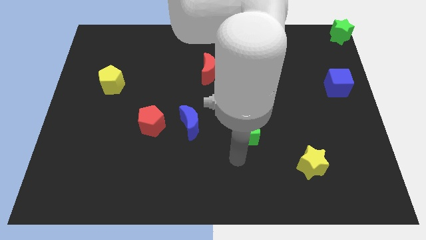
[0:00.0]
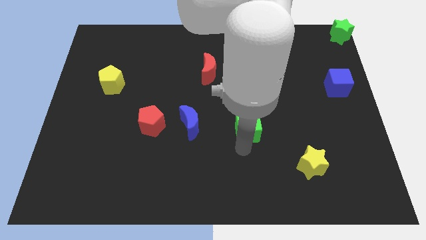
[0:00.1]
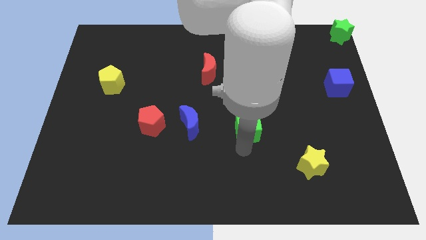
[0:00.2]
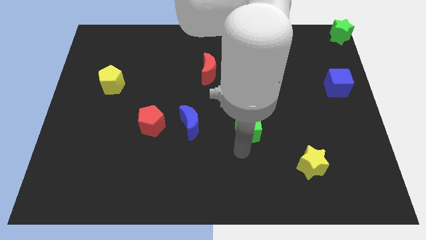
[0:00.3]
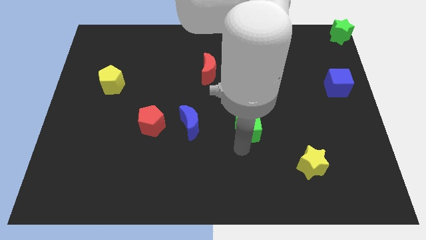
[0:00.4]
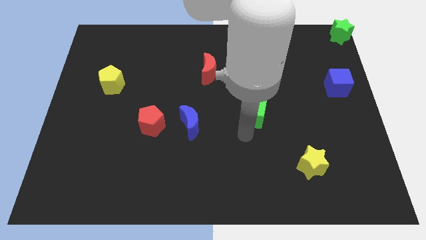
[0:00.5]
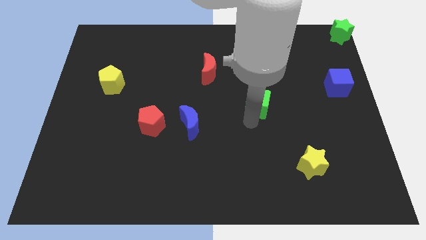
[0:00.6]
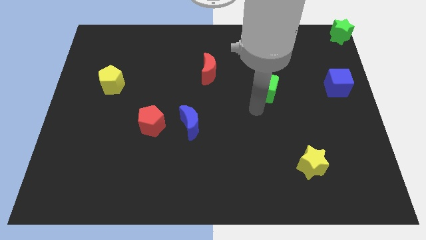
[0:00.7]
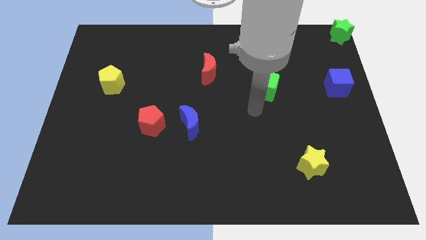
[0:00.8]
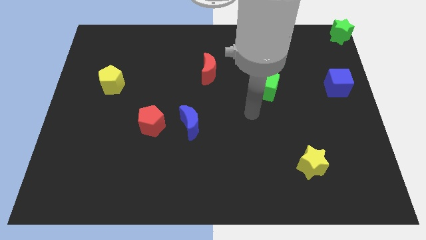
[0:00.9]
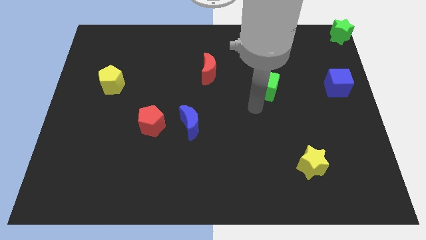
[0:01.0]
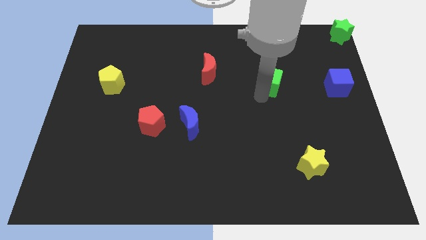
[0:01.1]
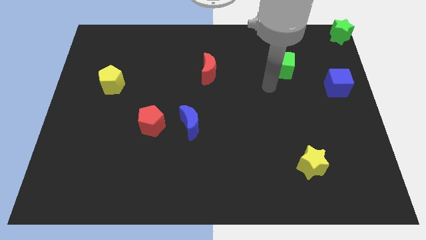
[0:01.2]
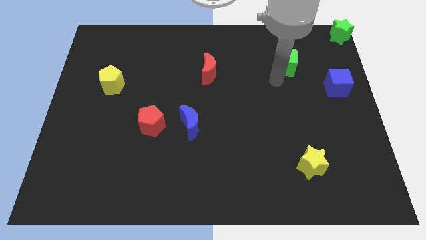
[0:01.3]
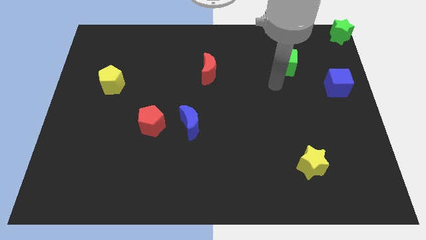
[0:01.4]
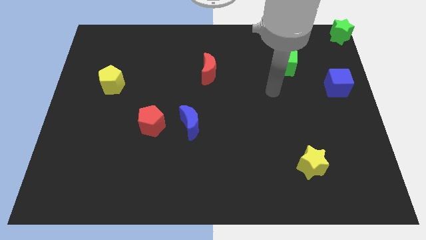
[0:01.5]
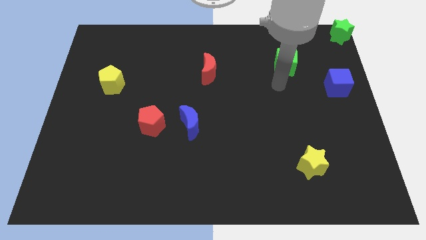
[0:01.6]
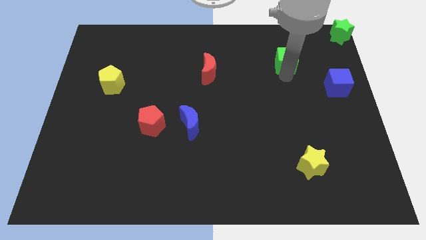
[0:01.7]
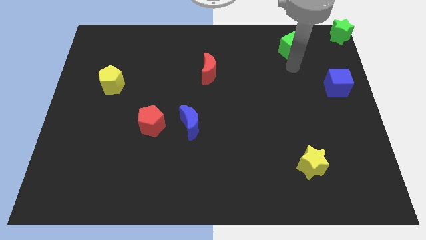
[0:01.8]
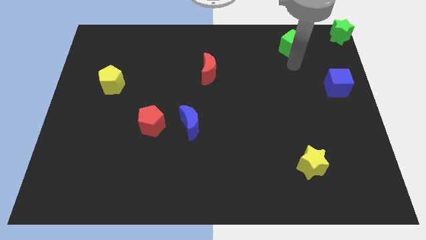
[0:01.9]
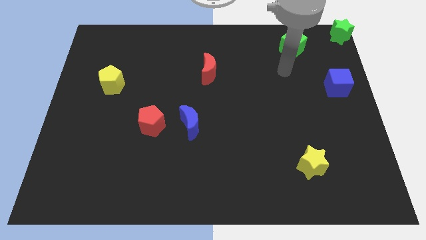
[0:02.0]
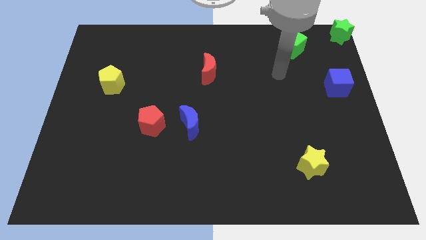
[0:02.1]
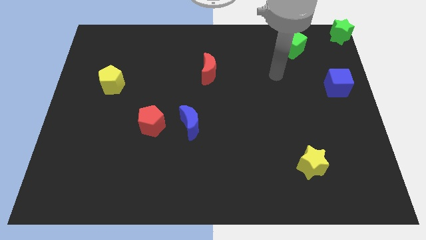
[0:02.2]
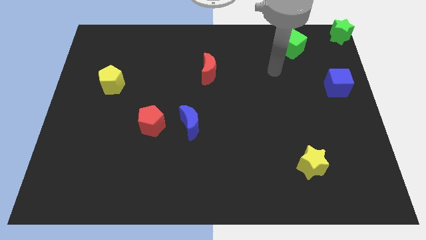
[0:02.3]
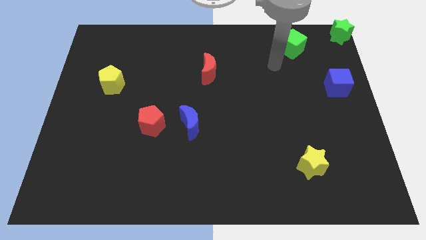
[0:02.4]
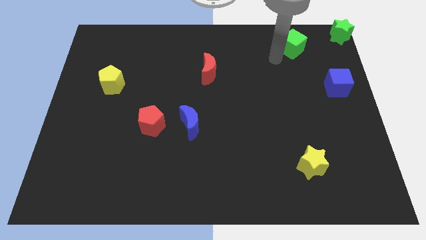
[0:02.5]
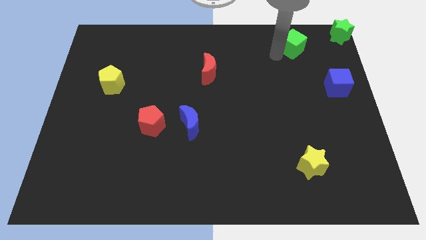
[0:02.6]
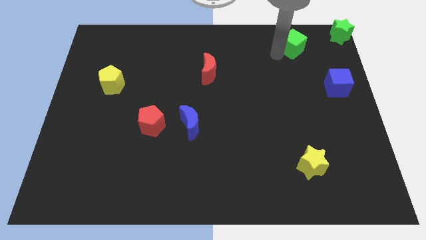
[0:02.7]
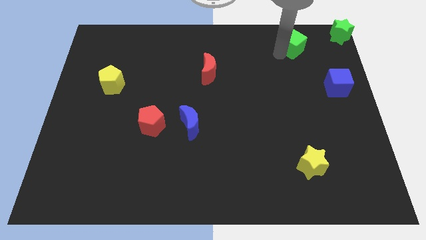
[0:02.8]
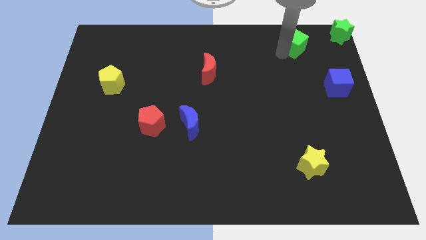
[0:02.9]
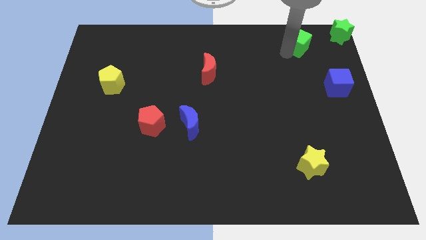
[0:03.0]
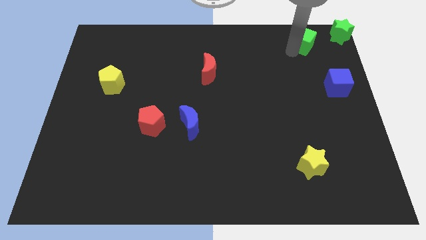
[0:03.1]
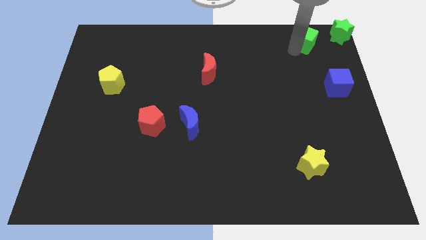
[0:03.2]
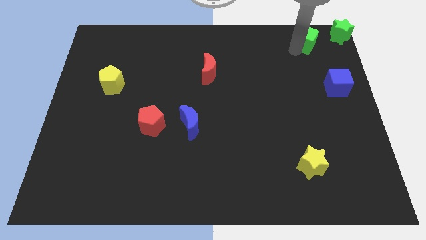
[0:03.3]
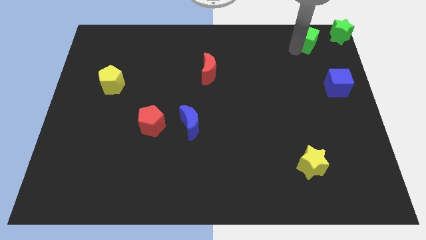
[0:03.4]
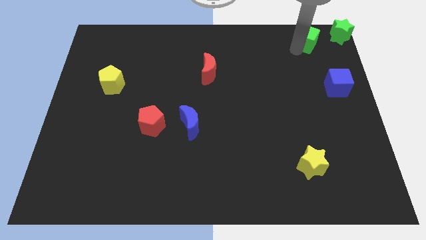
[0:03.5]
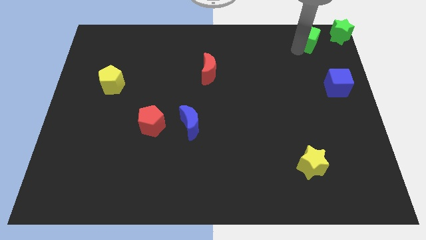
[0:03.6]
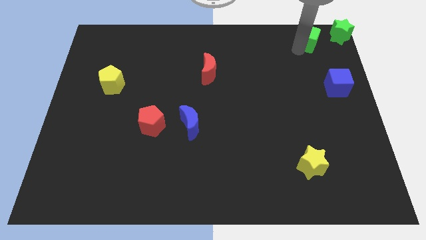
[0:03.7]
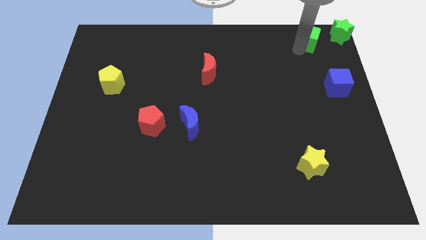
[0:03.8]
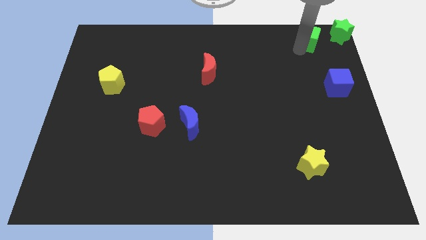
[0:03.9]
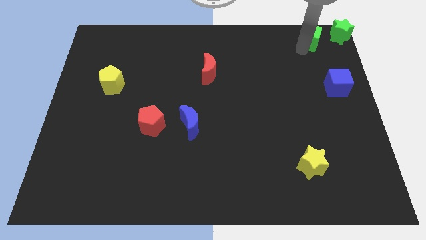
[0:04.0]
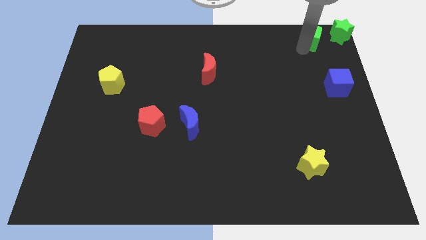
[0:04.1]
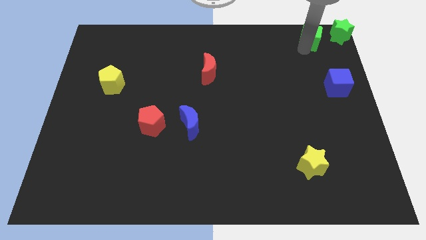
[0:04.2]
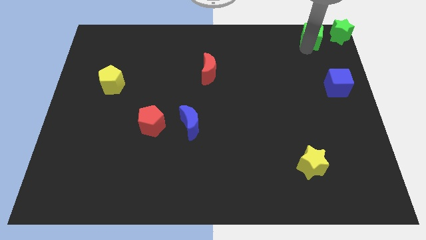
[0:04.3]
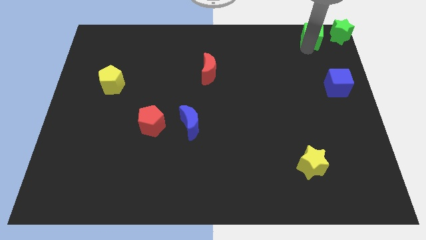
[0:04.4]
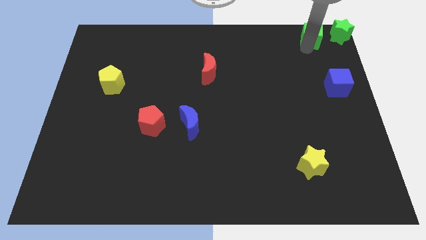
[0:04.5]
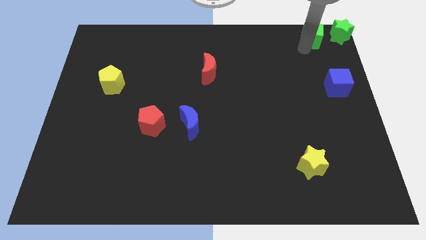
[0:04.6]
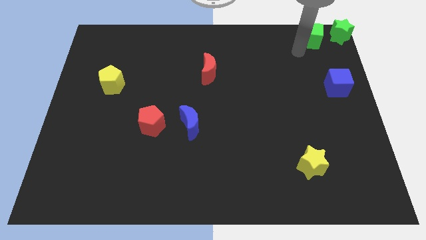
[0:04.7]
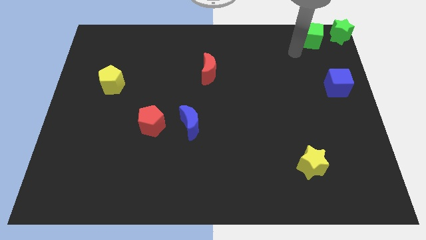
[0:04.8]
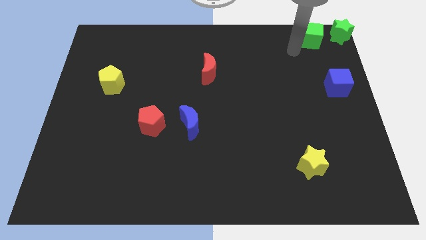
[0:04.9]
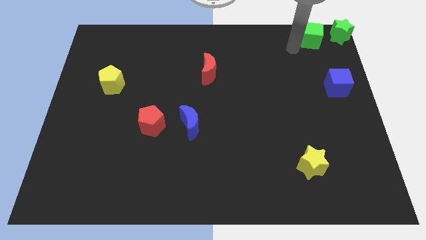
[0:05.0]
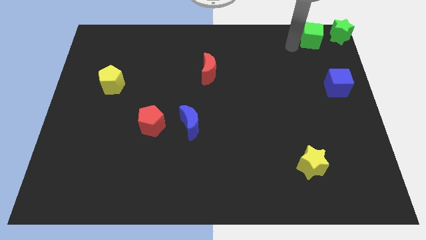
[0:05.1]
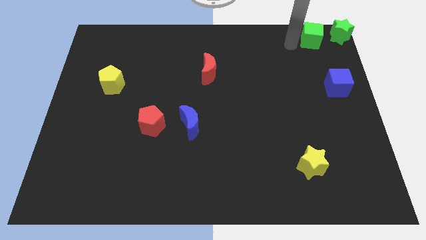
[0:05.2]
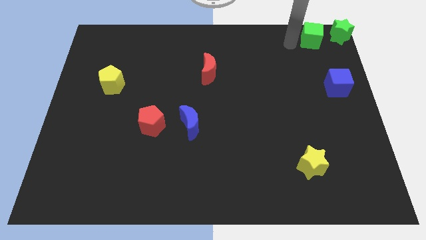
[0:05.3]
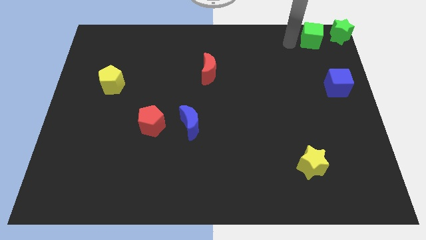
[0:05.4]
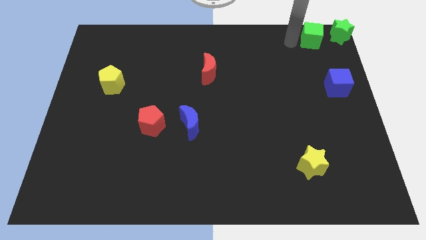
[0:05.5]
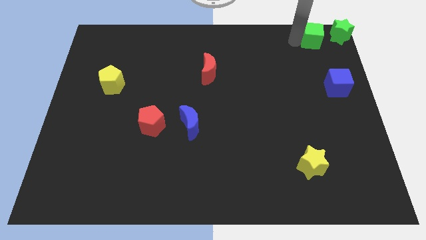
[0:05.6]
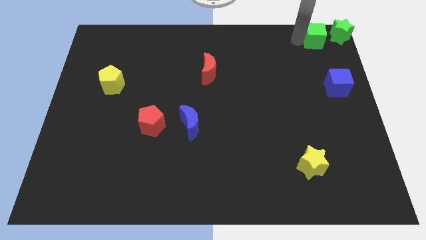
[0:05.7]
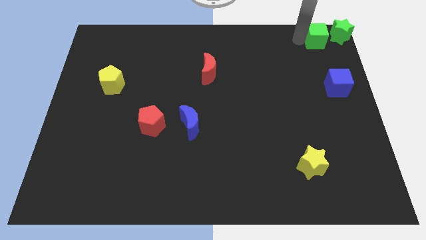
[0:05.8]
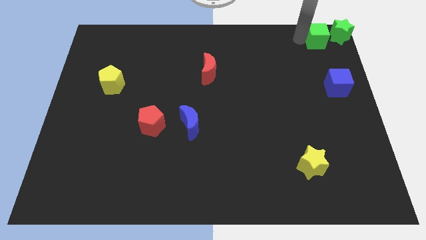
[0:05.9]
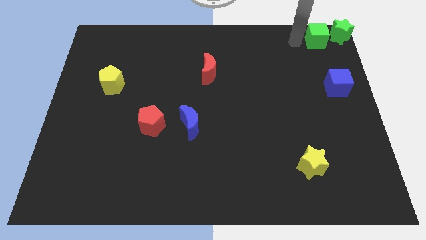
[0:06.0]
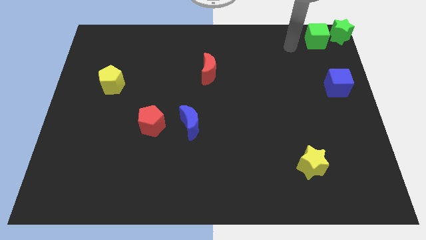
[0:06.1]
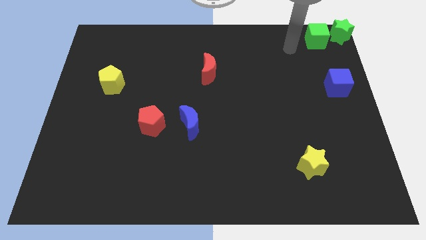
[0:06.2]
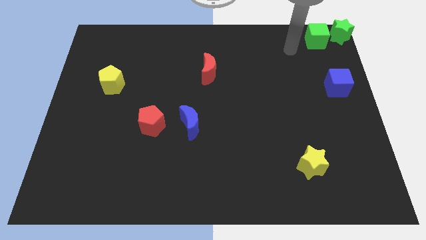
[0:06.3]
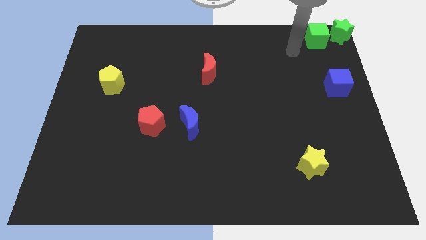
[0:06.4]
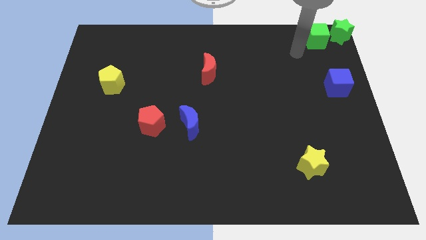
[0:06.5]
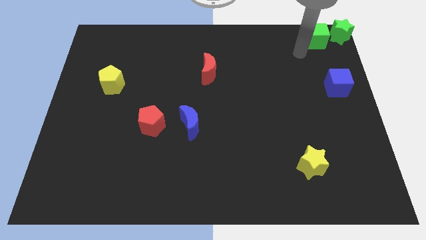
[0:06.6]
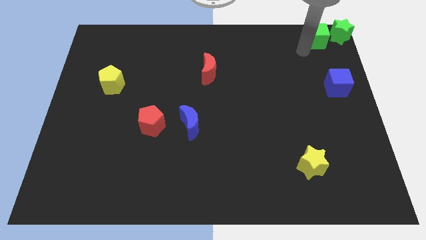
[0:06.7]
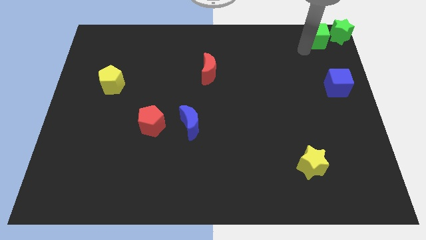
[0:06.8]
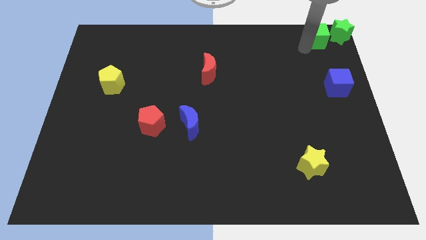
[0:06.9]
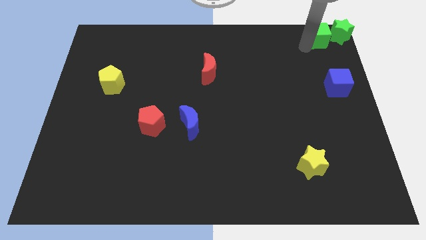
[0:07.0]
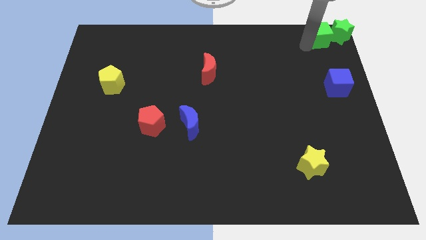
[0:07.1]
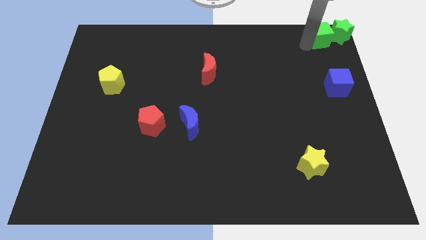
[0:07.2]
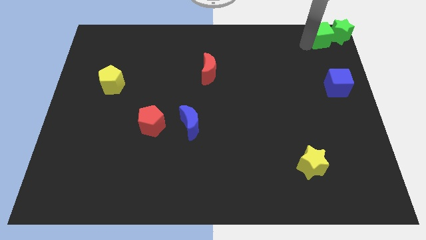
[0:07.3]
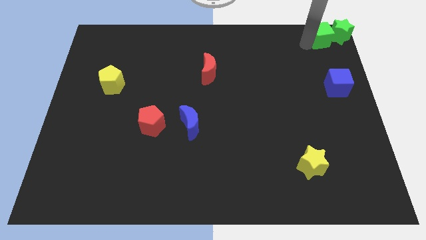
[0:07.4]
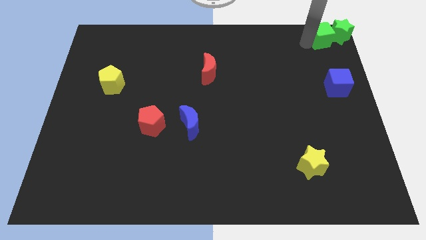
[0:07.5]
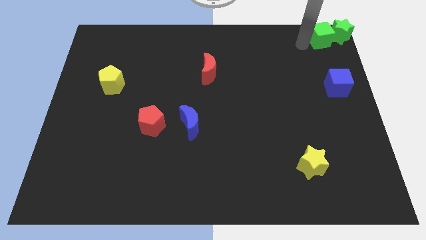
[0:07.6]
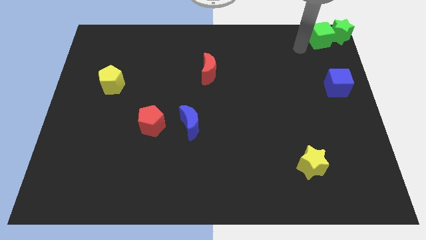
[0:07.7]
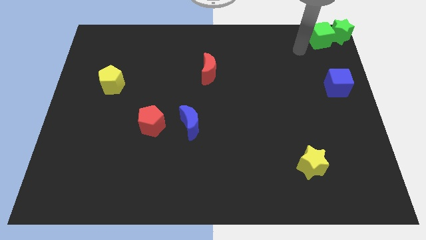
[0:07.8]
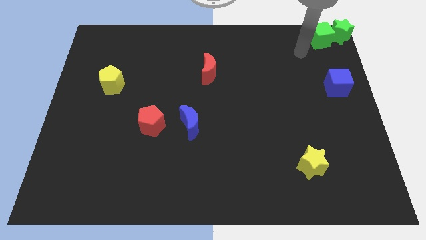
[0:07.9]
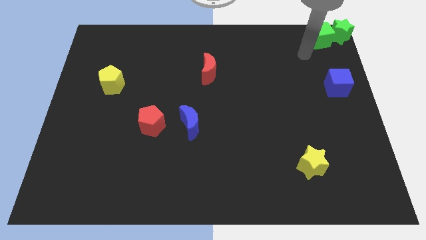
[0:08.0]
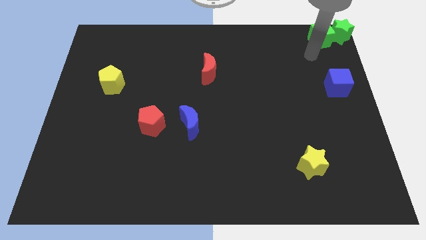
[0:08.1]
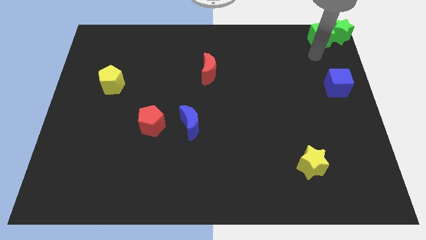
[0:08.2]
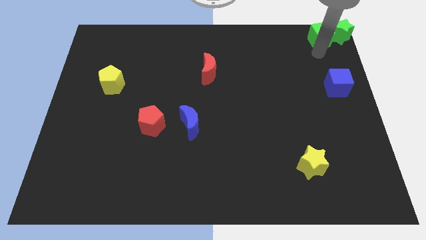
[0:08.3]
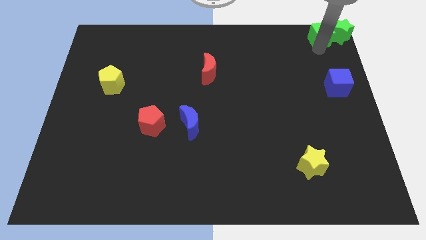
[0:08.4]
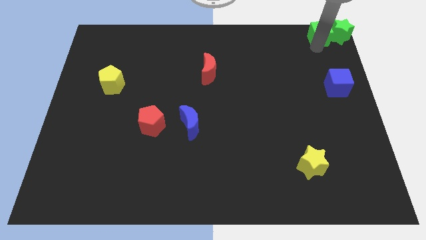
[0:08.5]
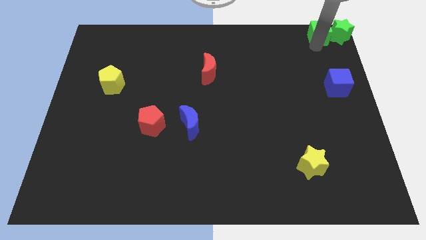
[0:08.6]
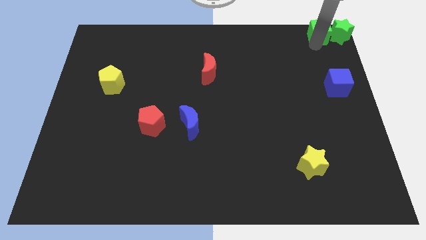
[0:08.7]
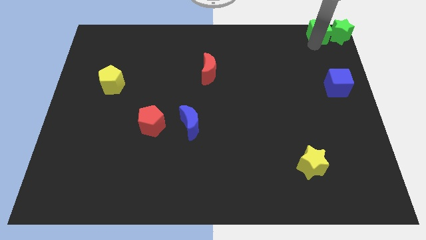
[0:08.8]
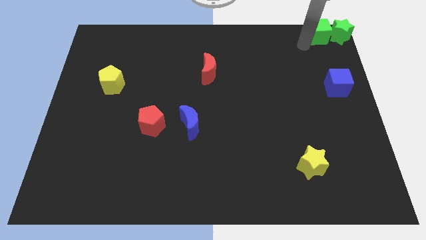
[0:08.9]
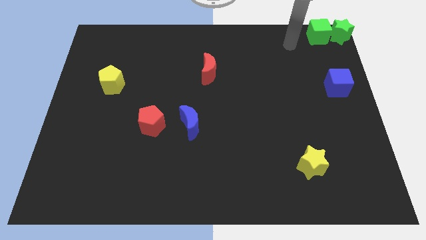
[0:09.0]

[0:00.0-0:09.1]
push the green cube and the green star together
